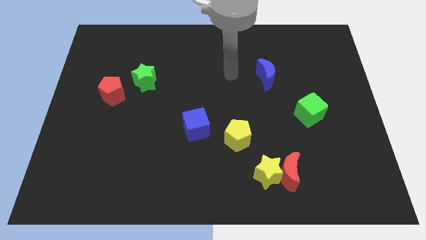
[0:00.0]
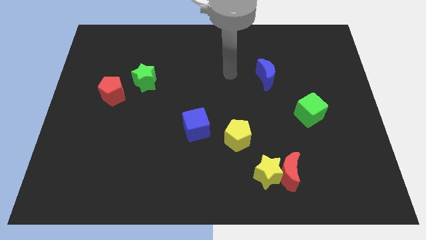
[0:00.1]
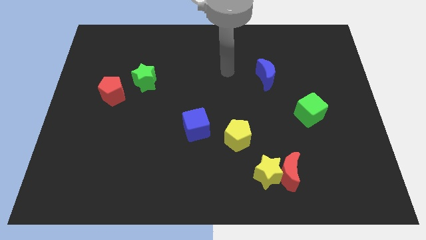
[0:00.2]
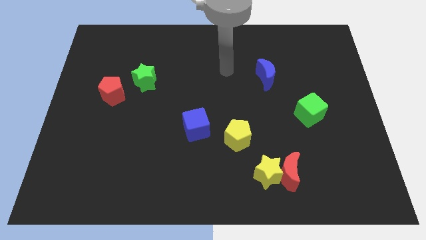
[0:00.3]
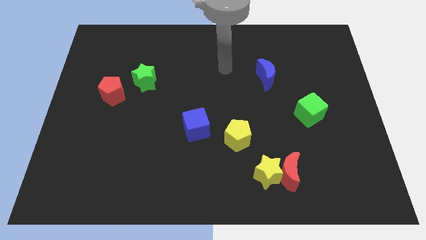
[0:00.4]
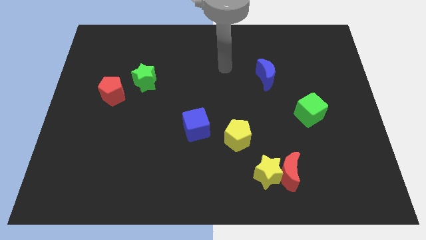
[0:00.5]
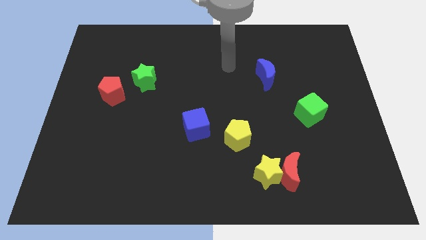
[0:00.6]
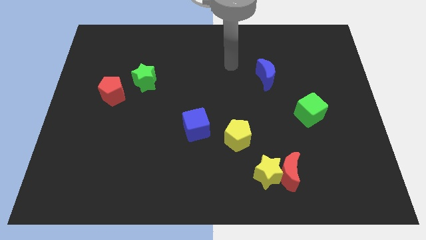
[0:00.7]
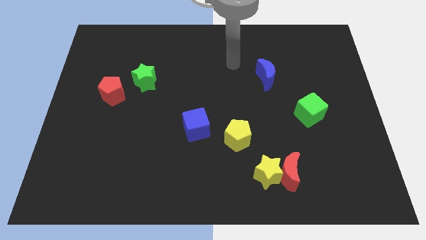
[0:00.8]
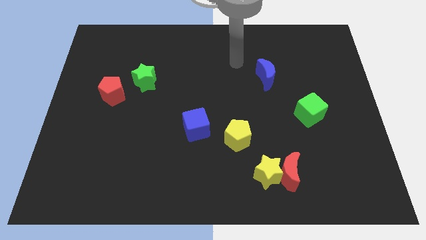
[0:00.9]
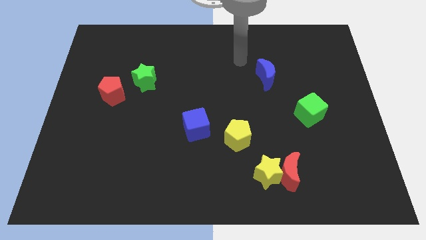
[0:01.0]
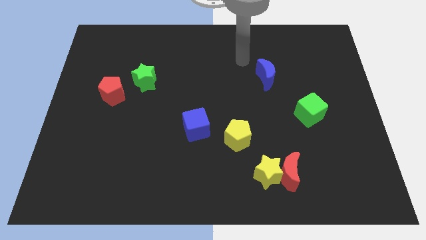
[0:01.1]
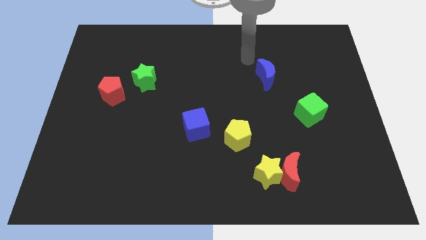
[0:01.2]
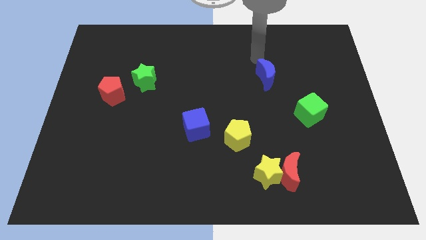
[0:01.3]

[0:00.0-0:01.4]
place your arm at the top of blue crescent

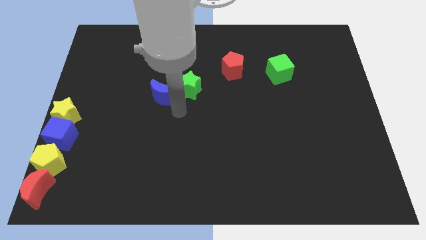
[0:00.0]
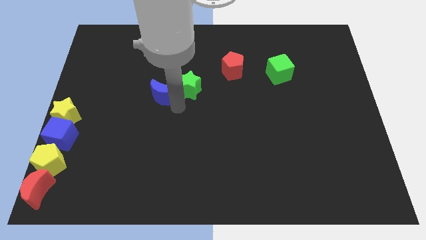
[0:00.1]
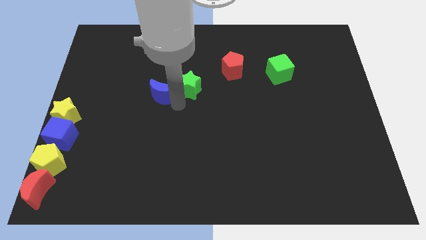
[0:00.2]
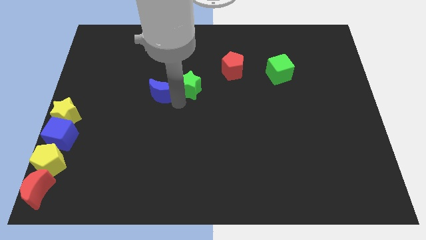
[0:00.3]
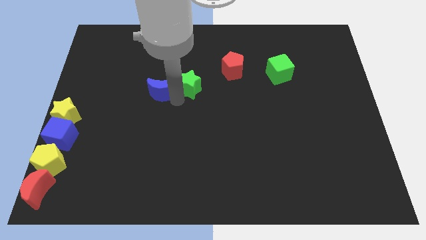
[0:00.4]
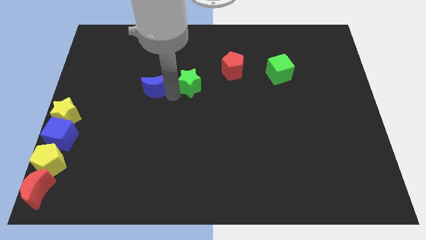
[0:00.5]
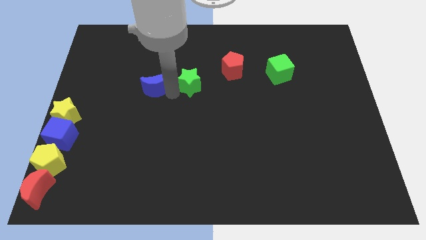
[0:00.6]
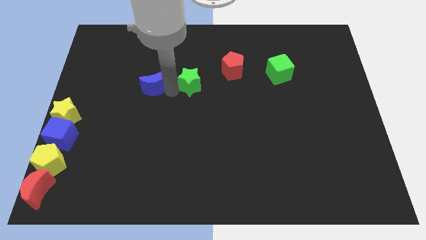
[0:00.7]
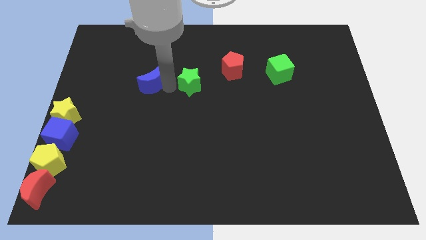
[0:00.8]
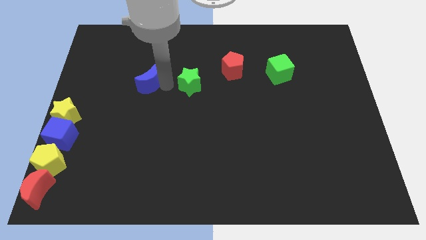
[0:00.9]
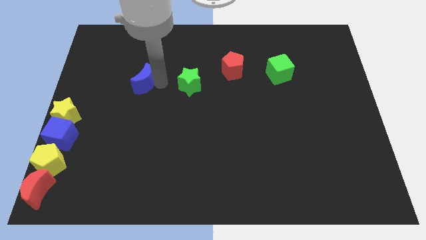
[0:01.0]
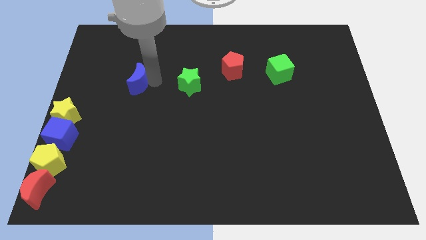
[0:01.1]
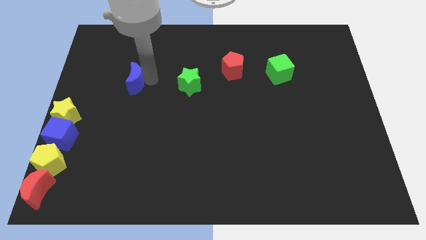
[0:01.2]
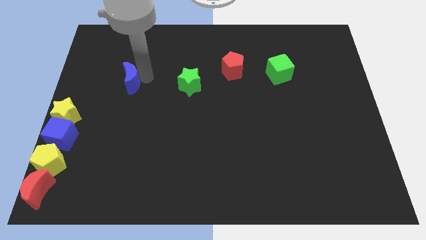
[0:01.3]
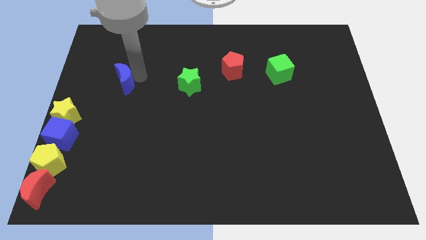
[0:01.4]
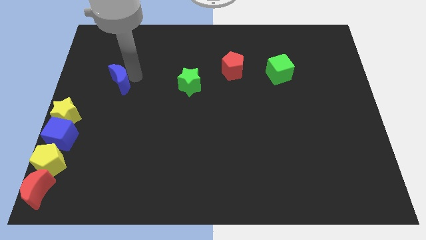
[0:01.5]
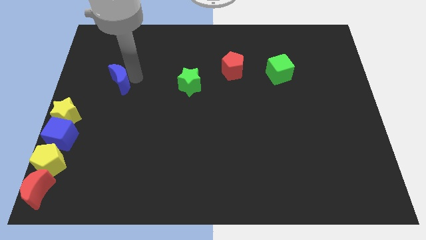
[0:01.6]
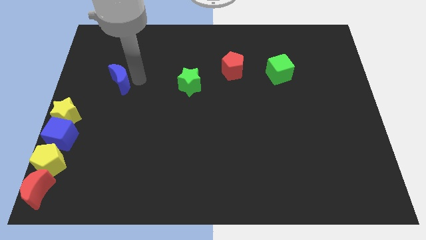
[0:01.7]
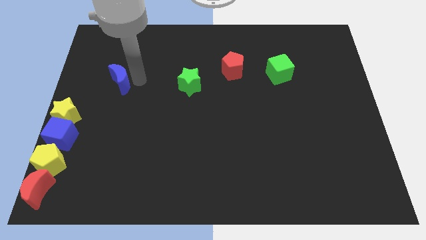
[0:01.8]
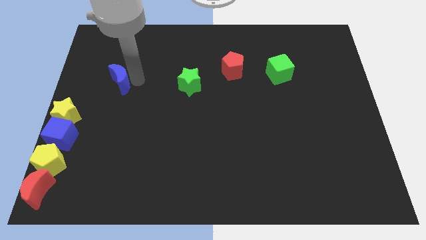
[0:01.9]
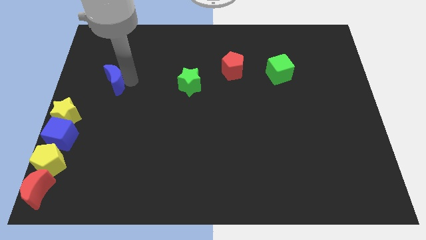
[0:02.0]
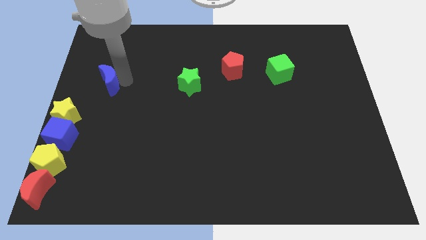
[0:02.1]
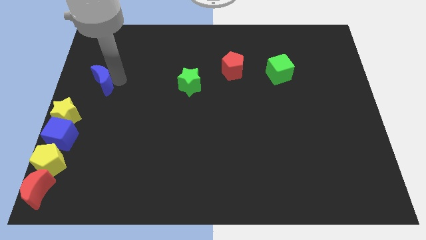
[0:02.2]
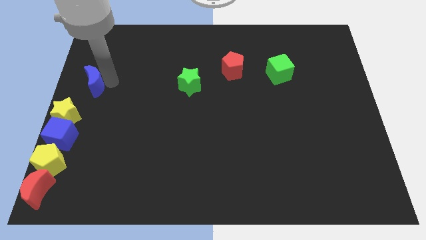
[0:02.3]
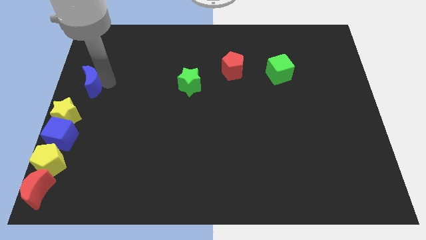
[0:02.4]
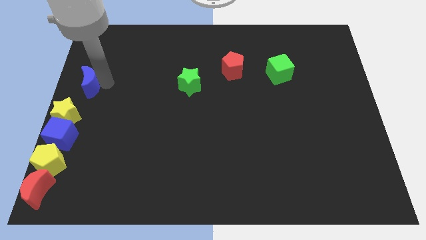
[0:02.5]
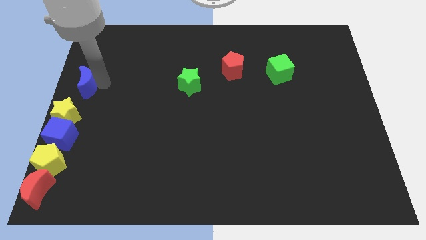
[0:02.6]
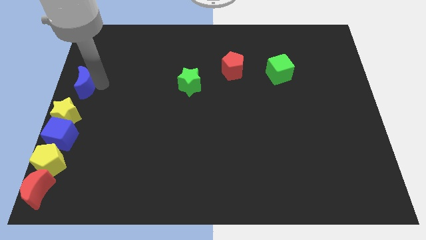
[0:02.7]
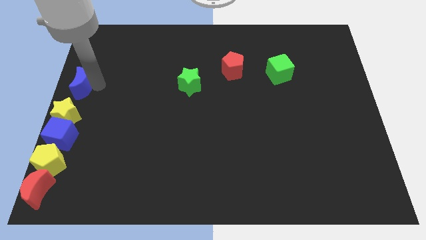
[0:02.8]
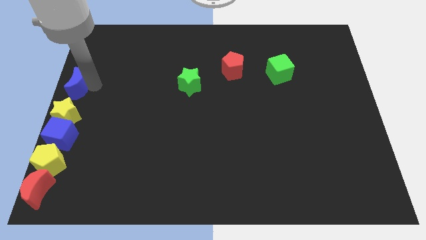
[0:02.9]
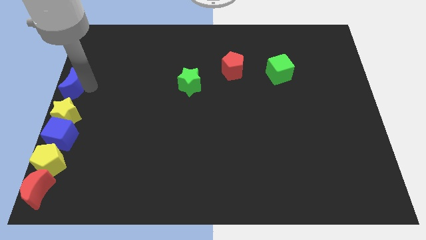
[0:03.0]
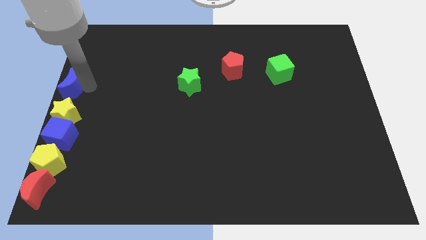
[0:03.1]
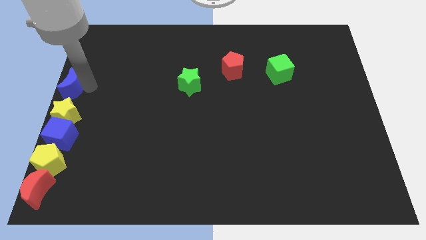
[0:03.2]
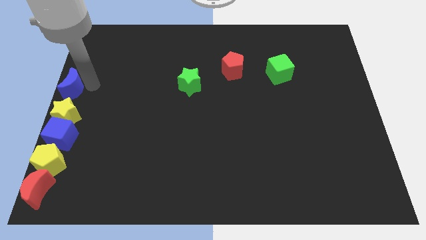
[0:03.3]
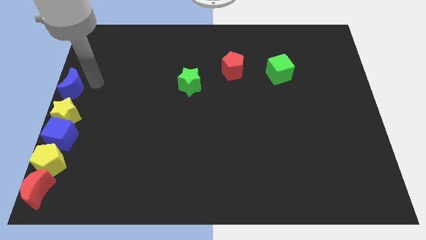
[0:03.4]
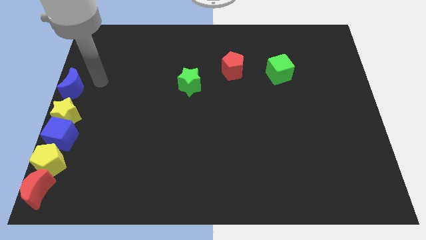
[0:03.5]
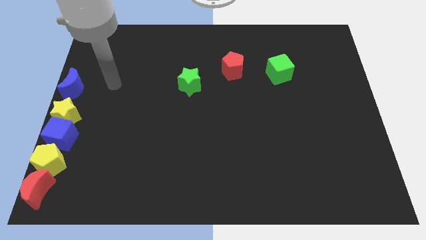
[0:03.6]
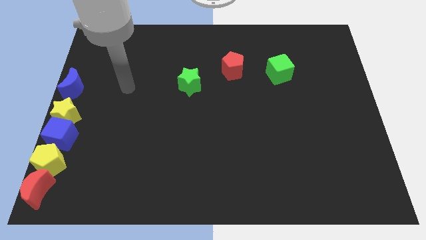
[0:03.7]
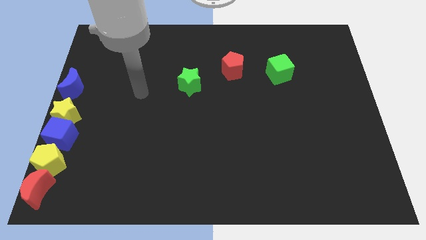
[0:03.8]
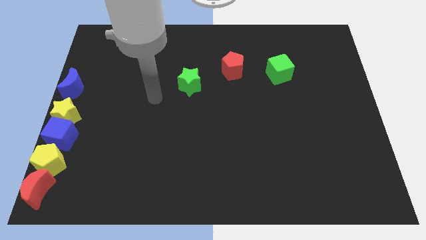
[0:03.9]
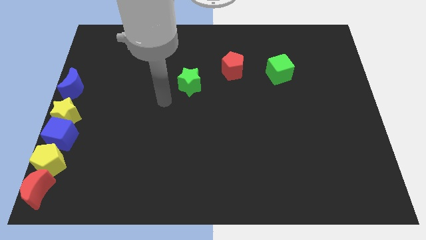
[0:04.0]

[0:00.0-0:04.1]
place the blue moon above the yellow star

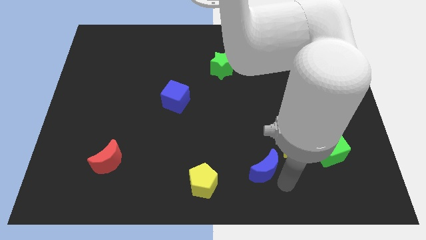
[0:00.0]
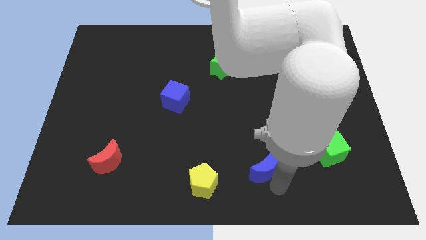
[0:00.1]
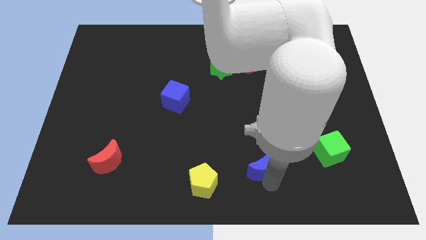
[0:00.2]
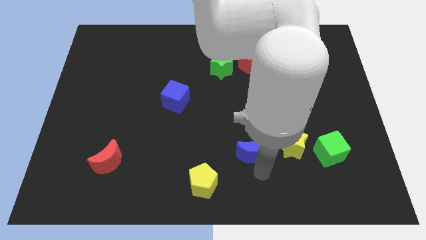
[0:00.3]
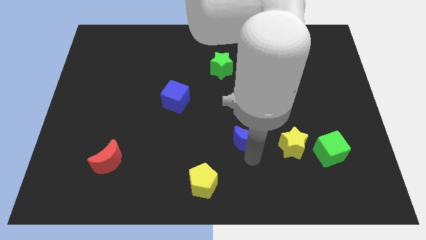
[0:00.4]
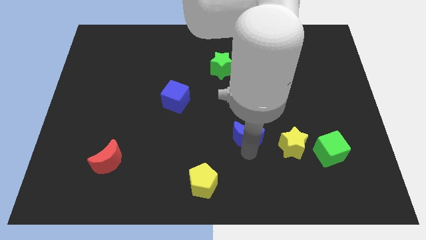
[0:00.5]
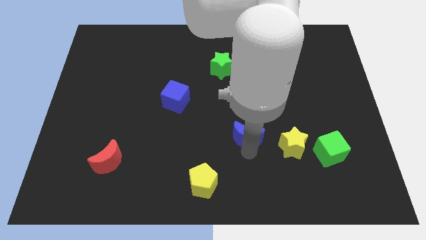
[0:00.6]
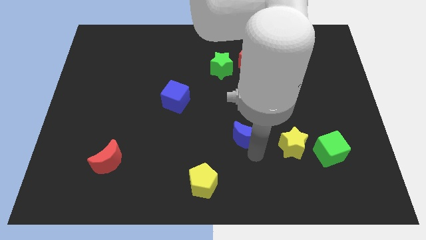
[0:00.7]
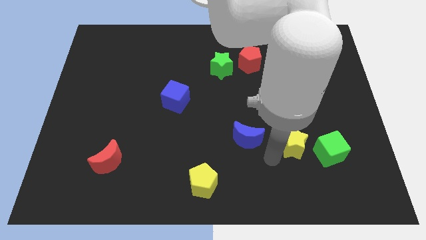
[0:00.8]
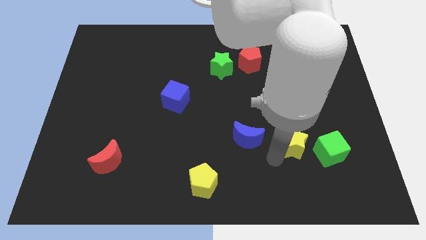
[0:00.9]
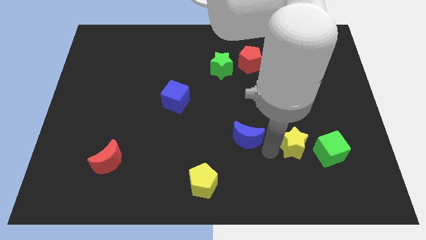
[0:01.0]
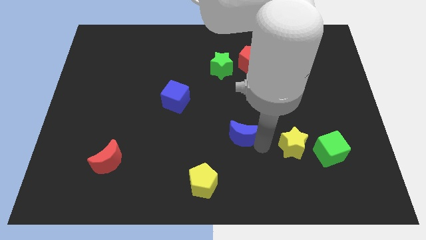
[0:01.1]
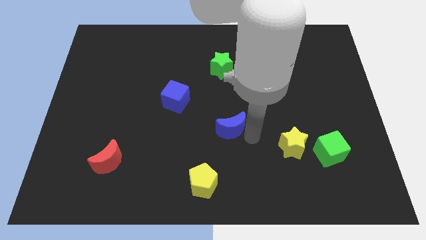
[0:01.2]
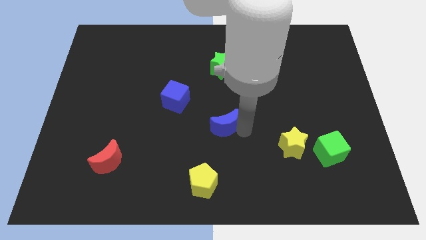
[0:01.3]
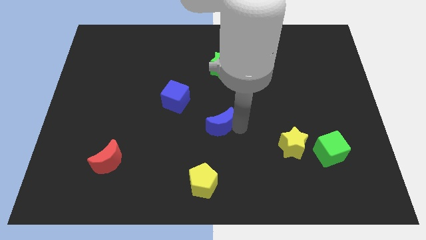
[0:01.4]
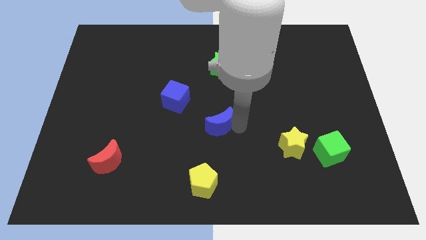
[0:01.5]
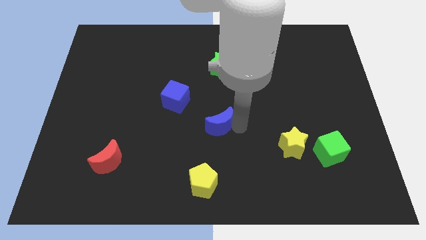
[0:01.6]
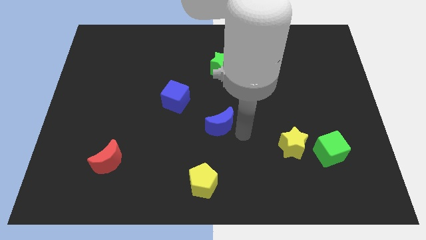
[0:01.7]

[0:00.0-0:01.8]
place the blue moon in between blue cube and yellow star

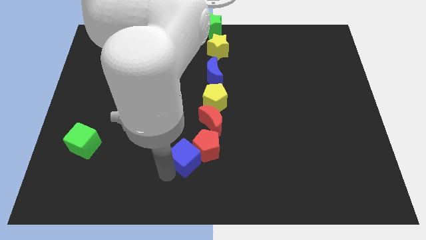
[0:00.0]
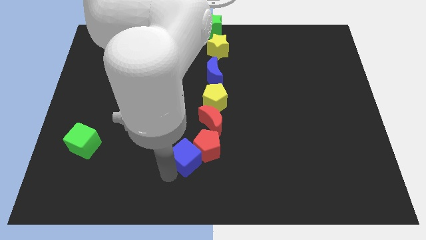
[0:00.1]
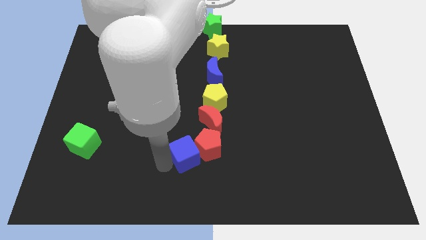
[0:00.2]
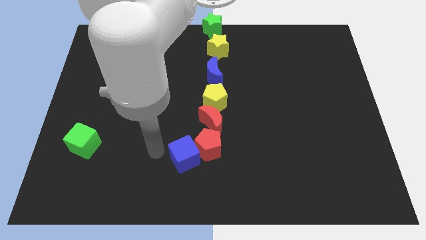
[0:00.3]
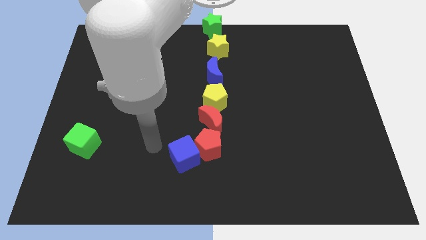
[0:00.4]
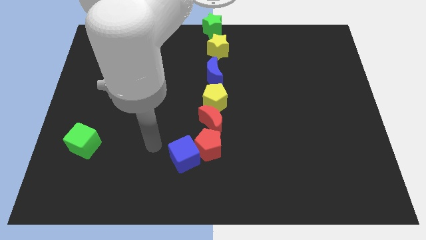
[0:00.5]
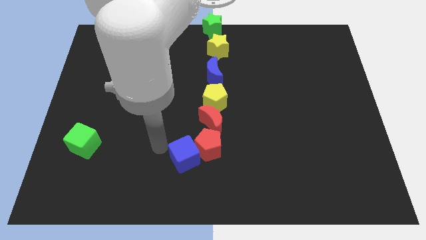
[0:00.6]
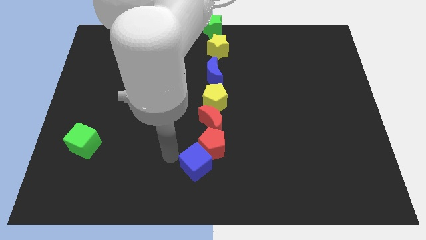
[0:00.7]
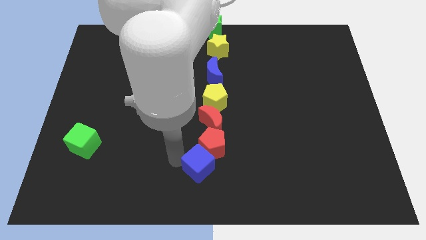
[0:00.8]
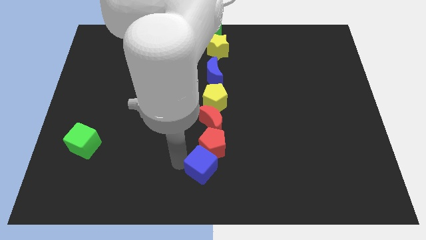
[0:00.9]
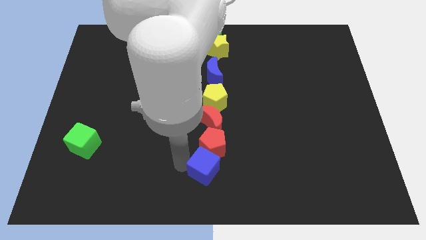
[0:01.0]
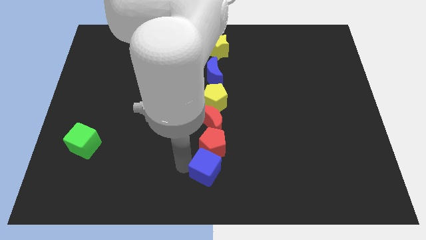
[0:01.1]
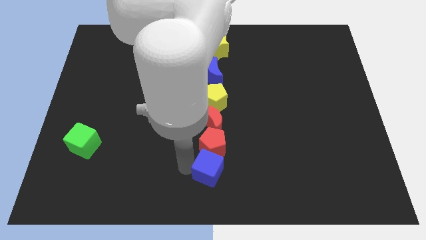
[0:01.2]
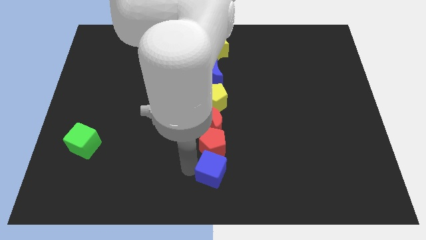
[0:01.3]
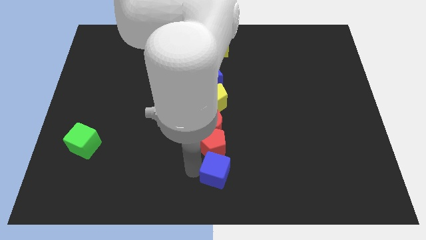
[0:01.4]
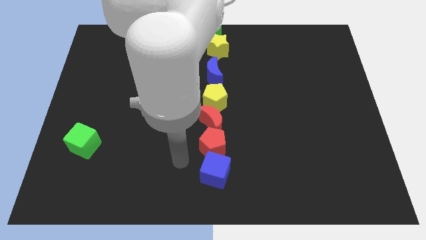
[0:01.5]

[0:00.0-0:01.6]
move the blue cube under the red pentagon

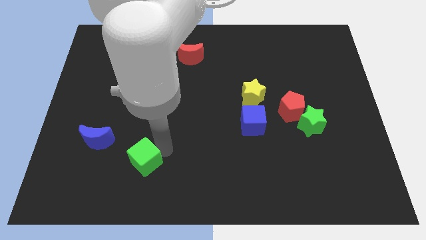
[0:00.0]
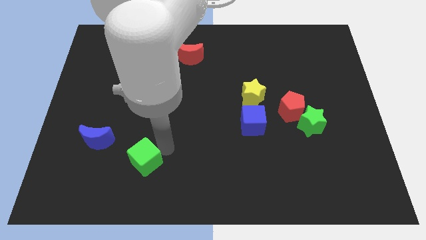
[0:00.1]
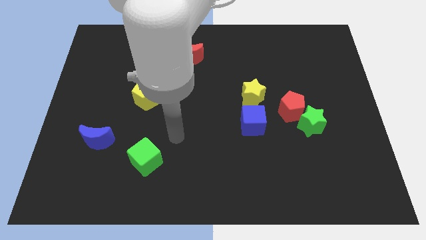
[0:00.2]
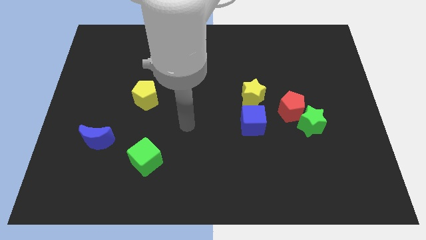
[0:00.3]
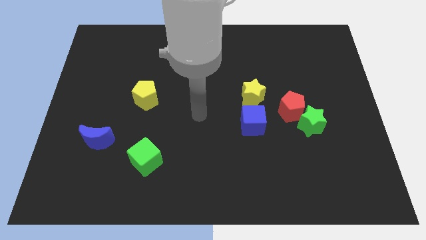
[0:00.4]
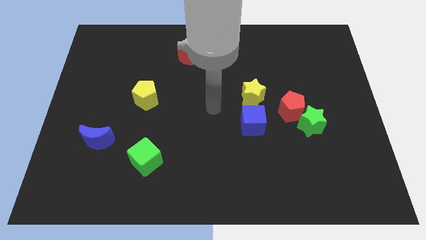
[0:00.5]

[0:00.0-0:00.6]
move the arm away from the green cube
